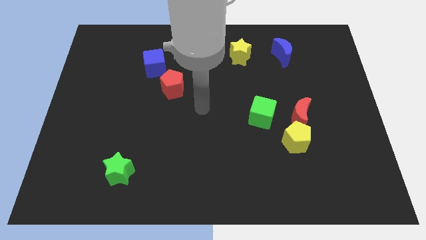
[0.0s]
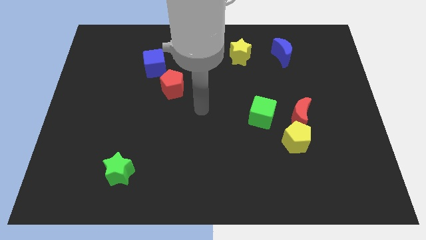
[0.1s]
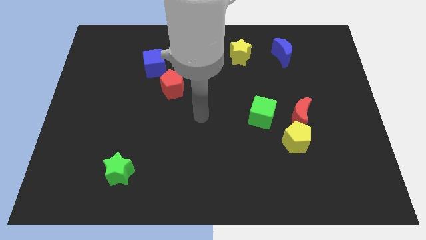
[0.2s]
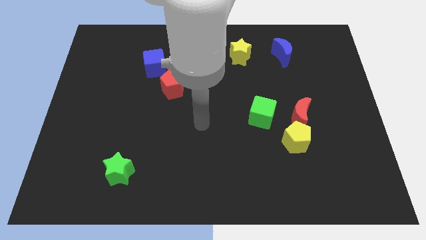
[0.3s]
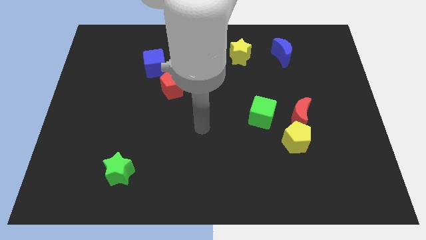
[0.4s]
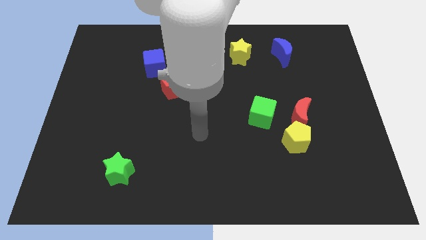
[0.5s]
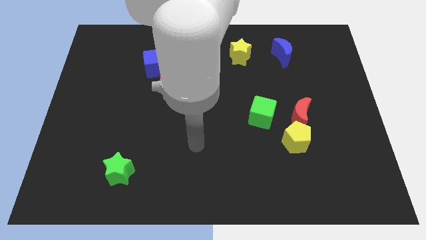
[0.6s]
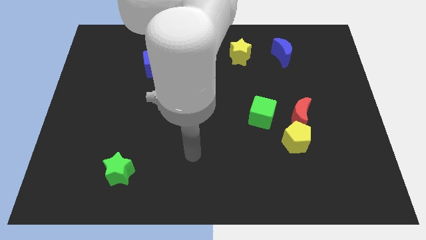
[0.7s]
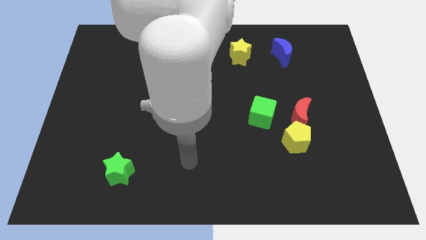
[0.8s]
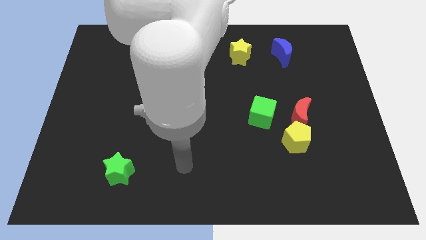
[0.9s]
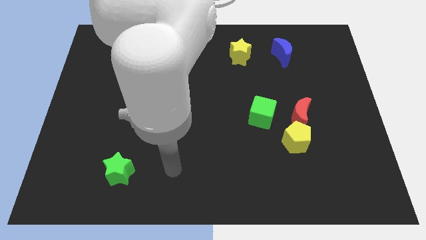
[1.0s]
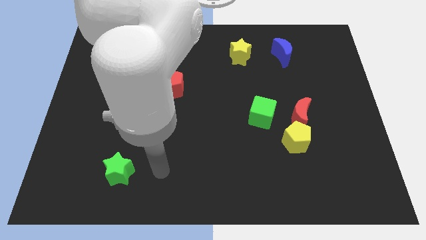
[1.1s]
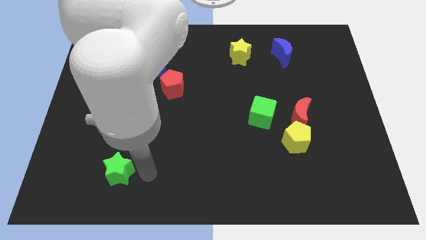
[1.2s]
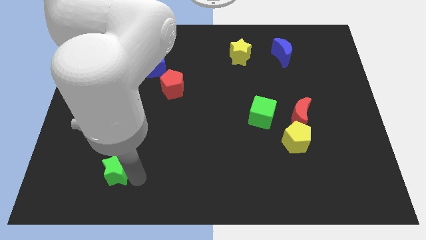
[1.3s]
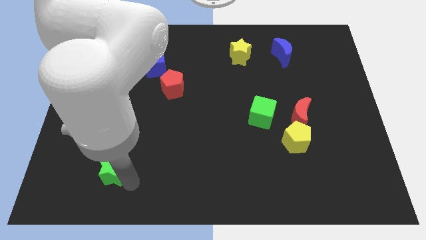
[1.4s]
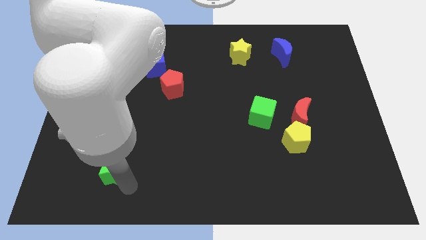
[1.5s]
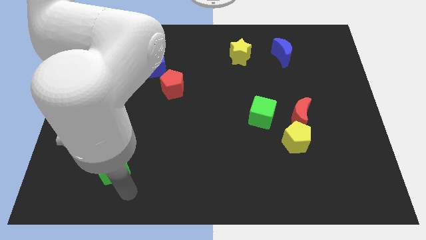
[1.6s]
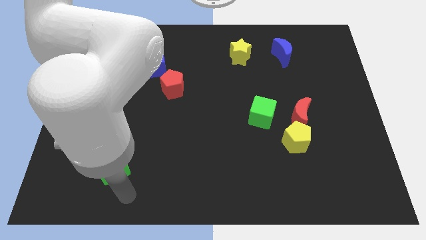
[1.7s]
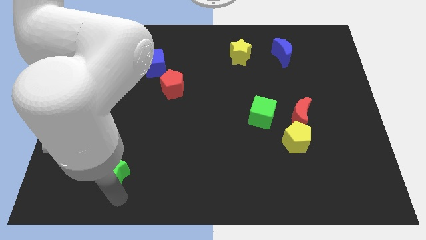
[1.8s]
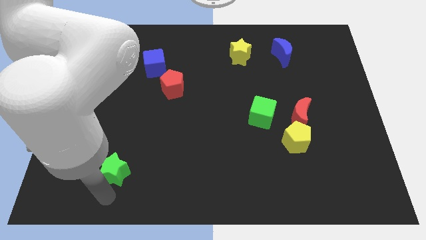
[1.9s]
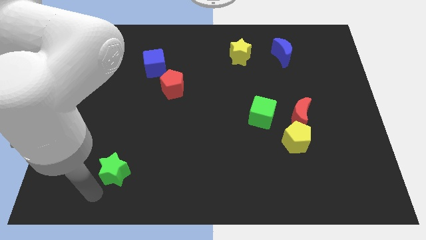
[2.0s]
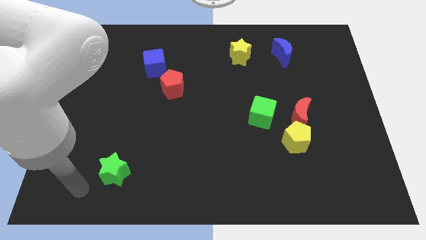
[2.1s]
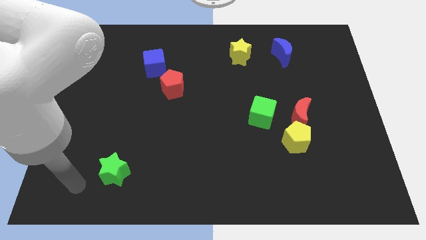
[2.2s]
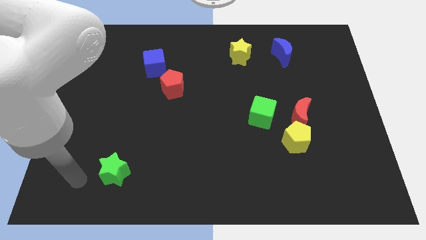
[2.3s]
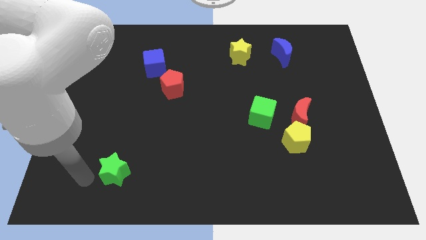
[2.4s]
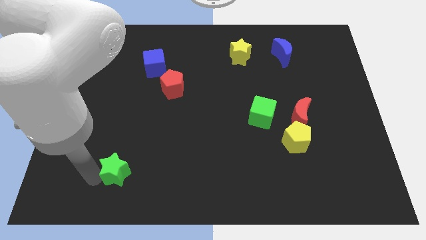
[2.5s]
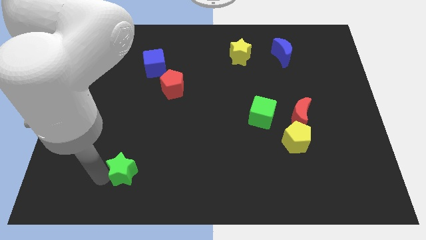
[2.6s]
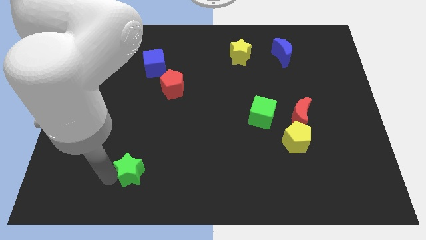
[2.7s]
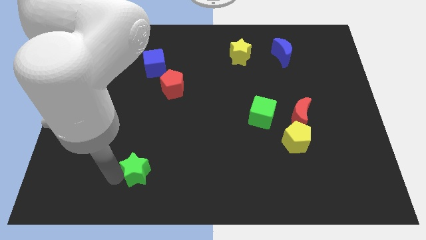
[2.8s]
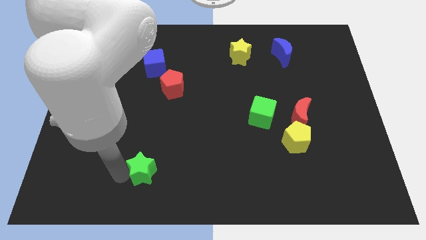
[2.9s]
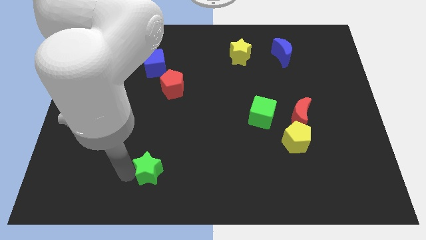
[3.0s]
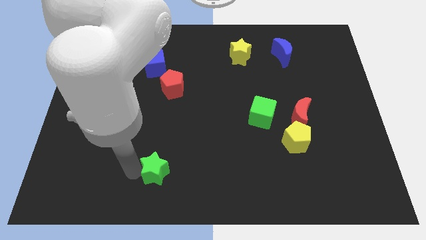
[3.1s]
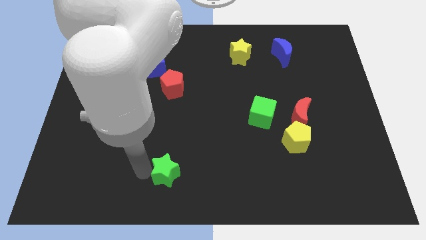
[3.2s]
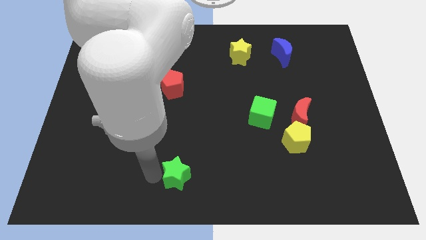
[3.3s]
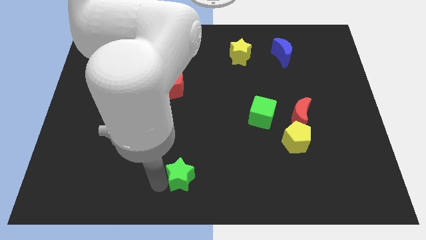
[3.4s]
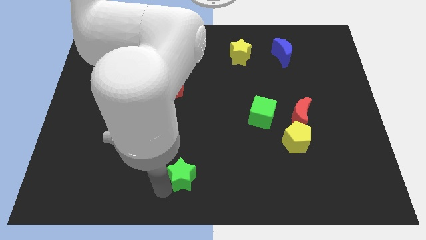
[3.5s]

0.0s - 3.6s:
move the green star towards right side

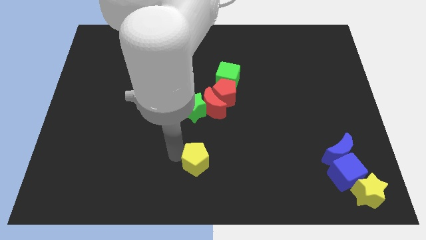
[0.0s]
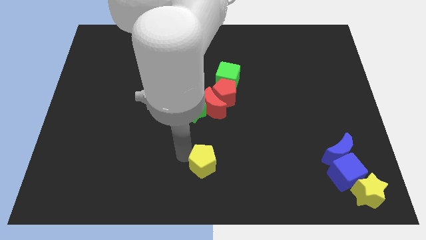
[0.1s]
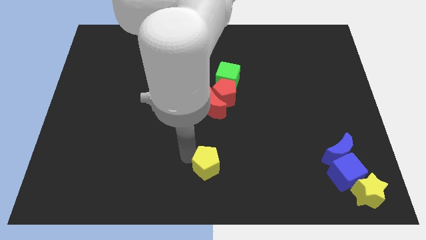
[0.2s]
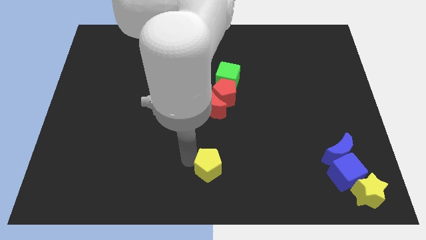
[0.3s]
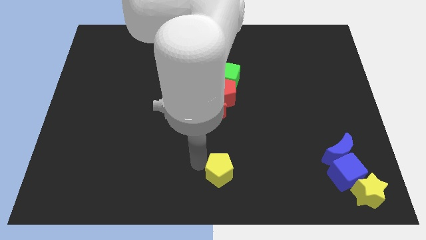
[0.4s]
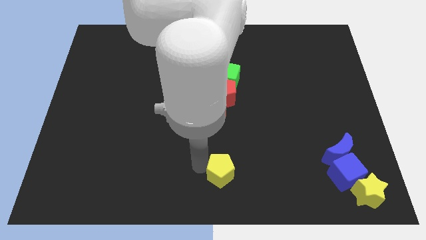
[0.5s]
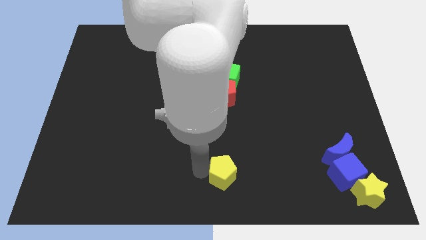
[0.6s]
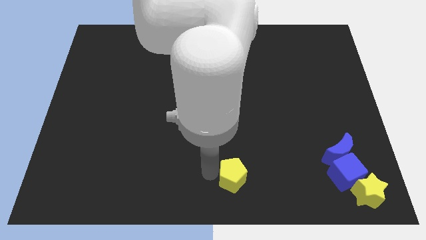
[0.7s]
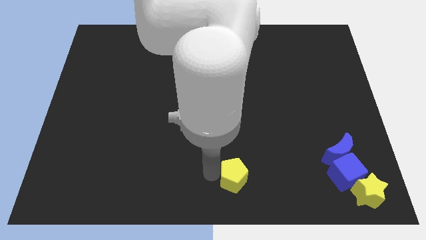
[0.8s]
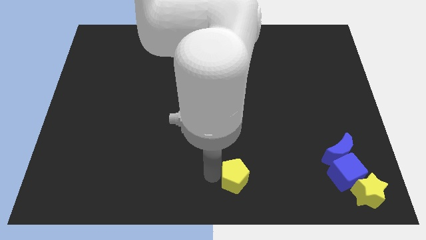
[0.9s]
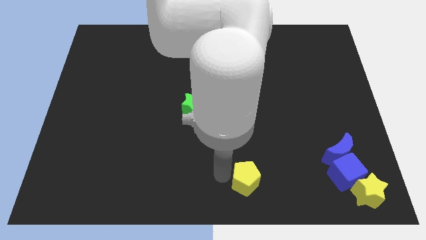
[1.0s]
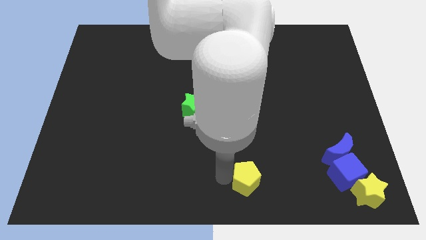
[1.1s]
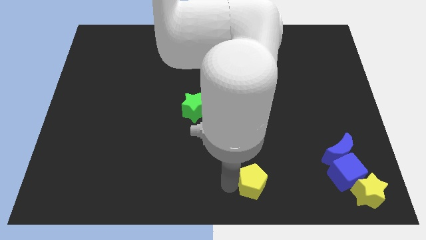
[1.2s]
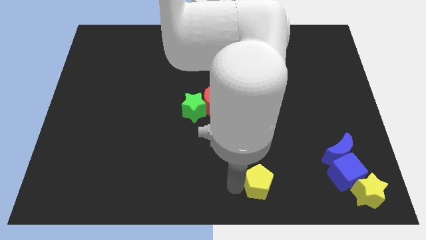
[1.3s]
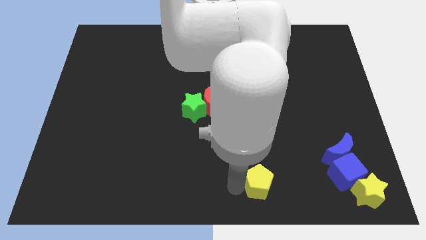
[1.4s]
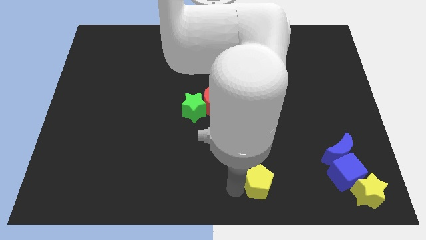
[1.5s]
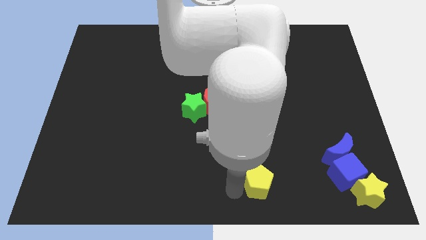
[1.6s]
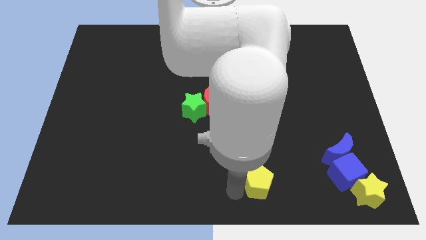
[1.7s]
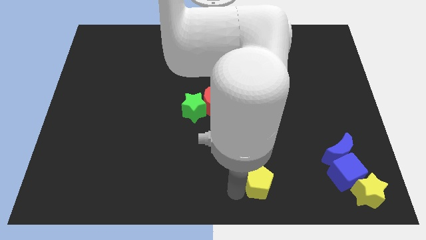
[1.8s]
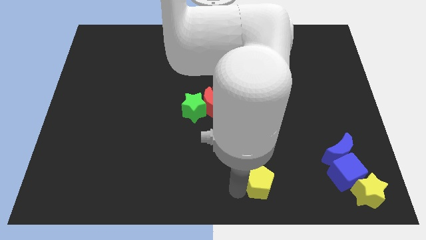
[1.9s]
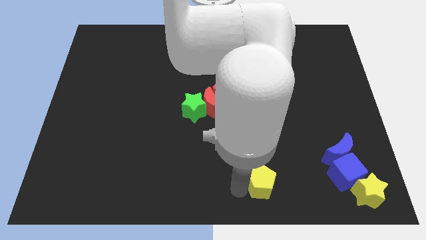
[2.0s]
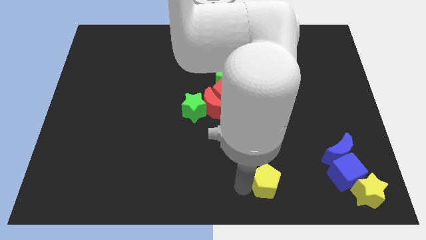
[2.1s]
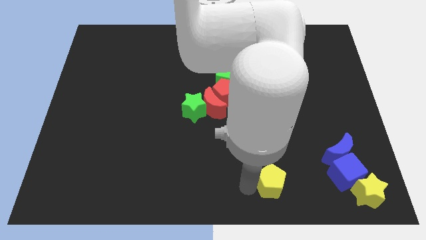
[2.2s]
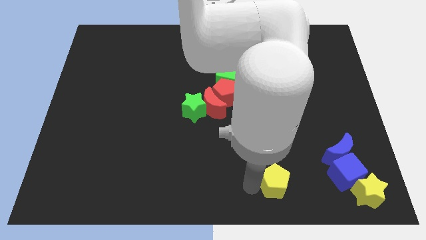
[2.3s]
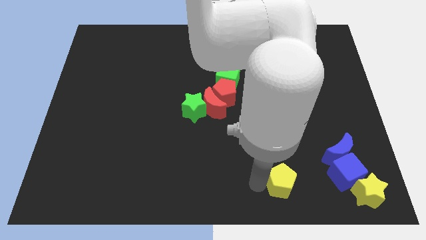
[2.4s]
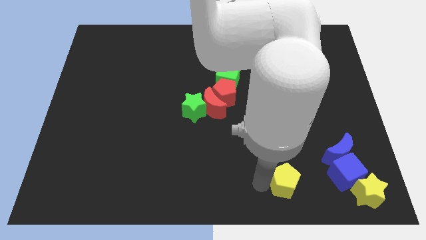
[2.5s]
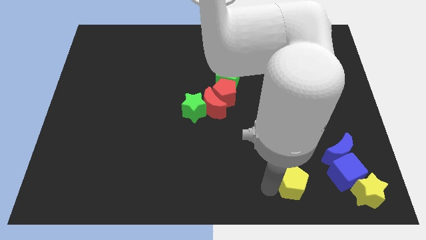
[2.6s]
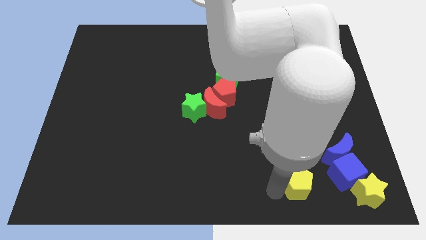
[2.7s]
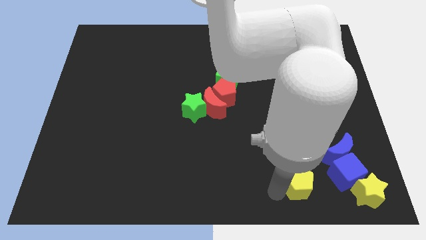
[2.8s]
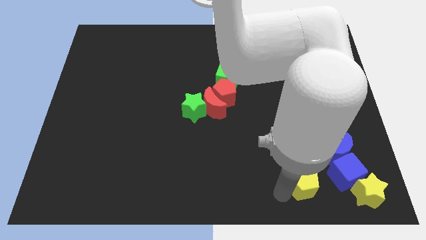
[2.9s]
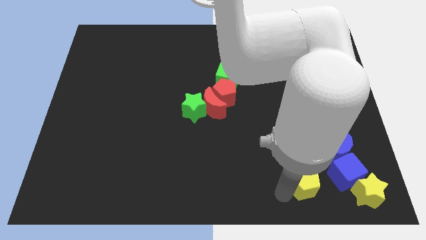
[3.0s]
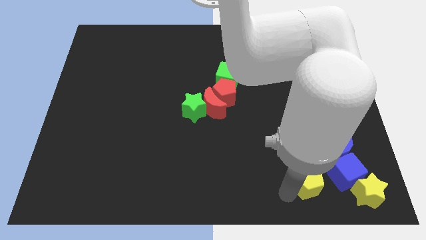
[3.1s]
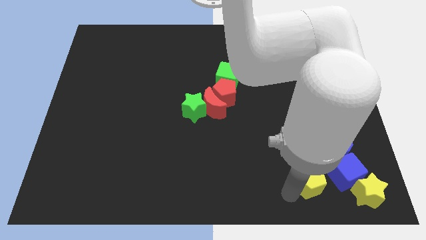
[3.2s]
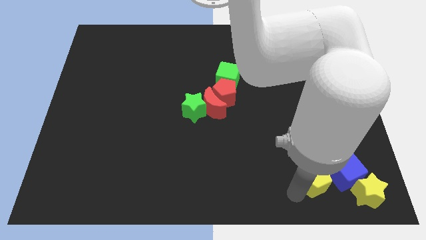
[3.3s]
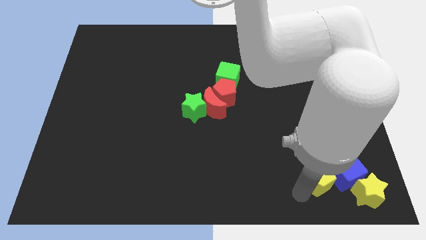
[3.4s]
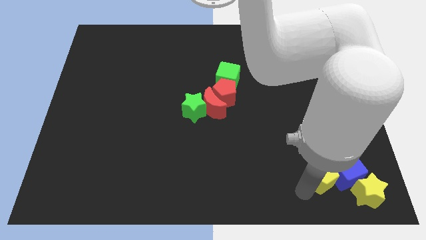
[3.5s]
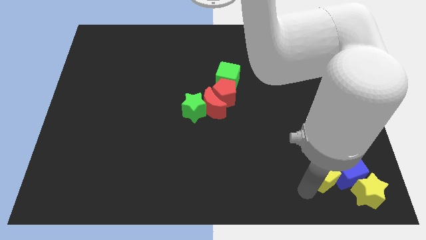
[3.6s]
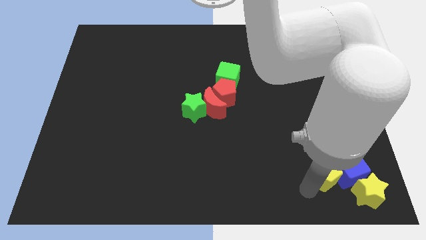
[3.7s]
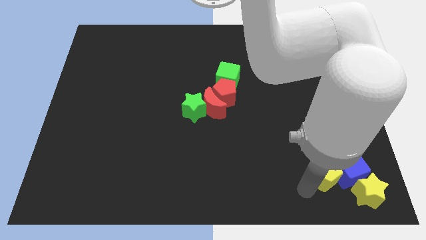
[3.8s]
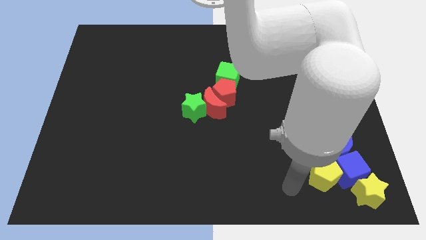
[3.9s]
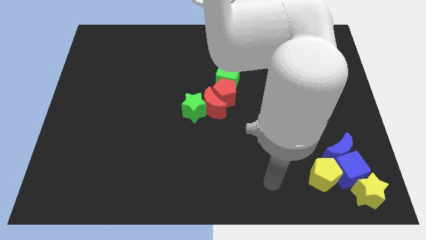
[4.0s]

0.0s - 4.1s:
push the yellow pentagon into the blue cube

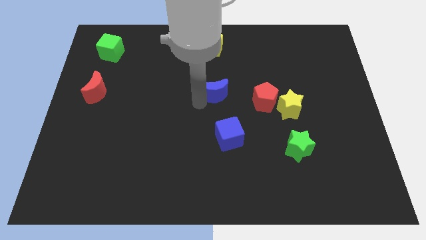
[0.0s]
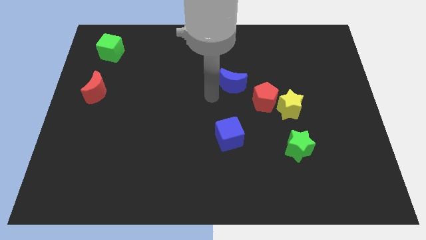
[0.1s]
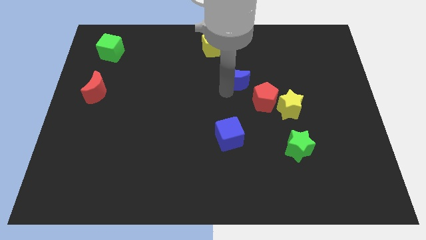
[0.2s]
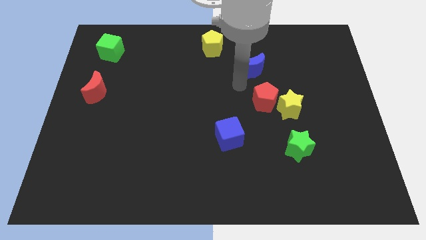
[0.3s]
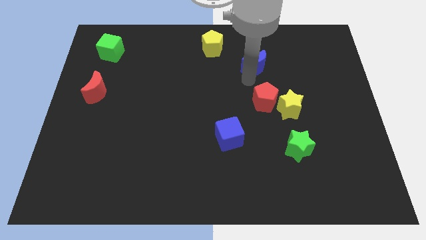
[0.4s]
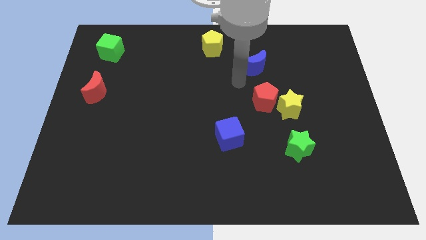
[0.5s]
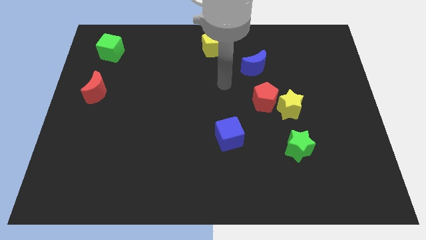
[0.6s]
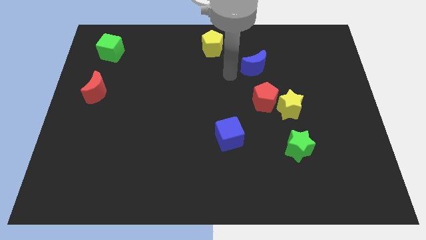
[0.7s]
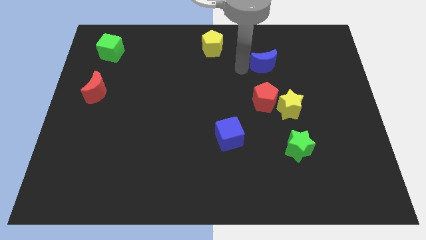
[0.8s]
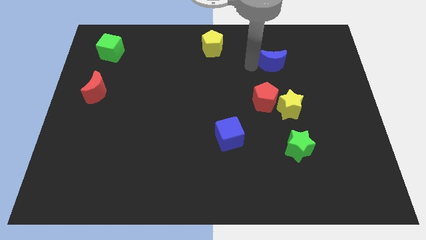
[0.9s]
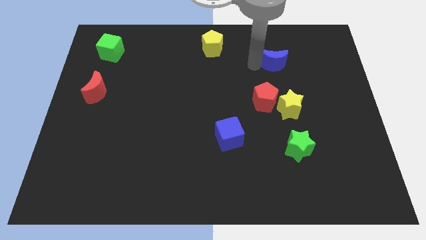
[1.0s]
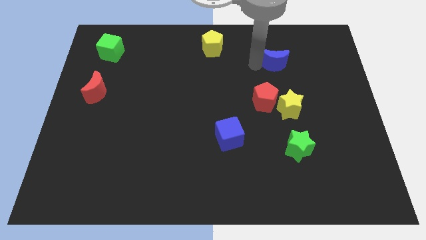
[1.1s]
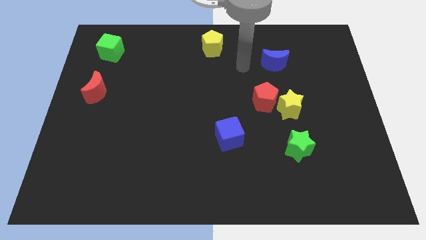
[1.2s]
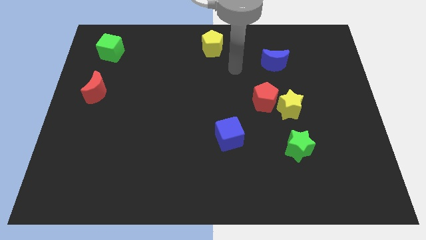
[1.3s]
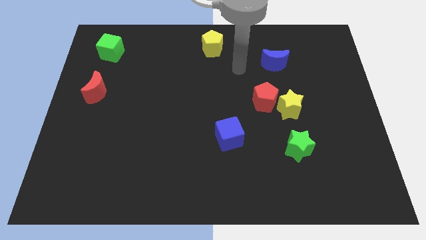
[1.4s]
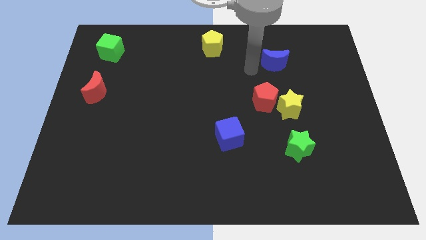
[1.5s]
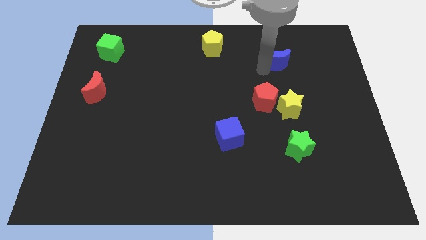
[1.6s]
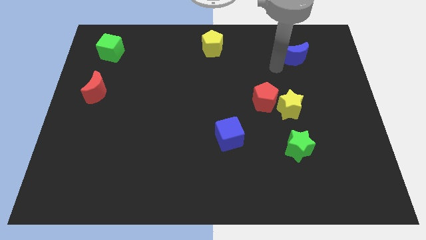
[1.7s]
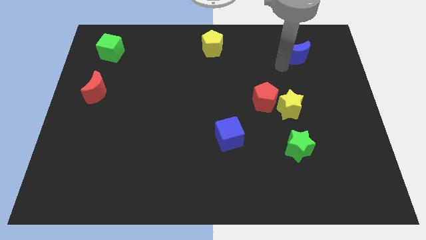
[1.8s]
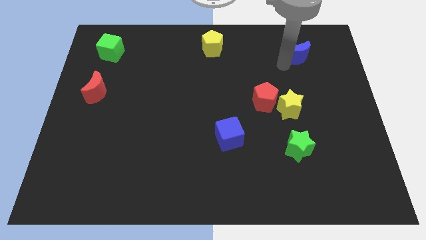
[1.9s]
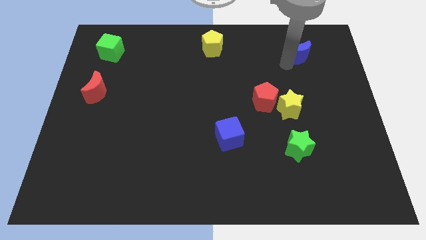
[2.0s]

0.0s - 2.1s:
move blue moon towards top left
